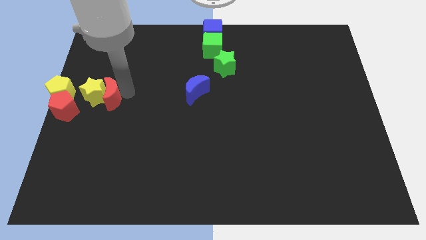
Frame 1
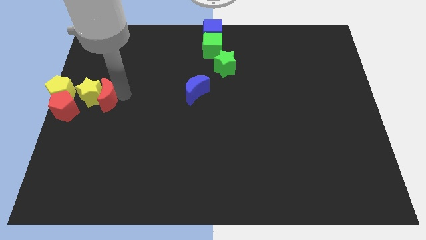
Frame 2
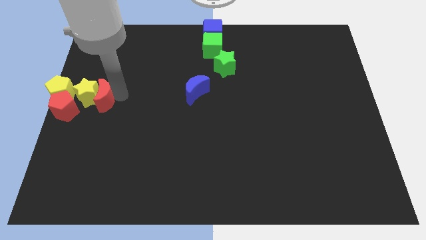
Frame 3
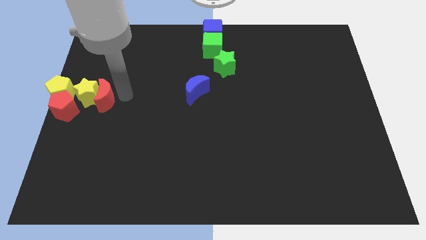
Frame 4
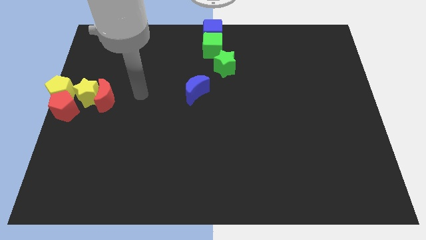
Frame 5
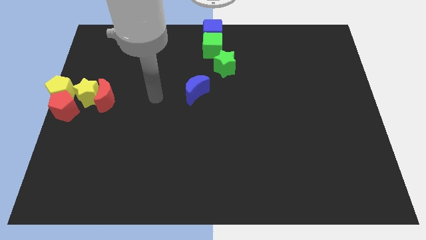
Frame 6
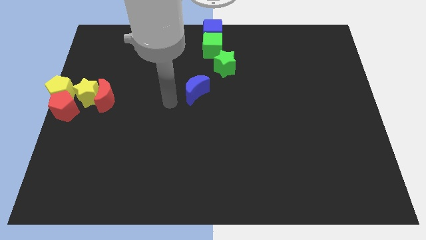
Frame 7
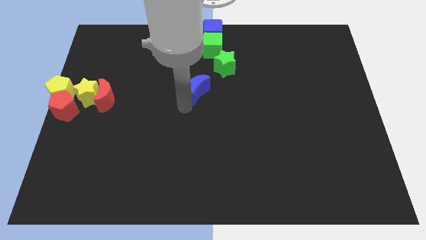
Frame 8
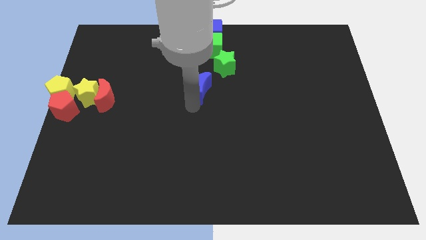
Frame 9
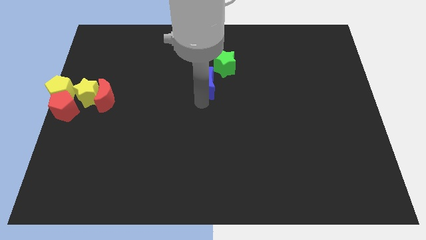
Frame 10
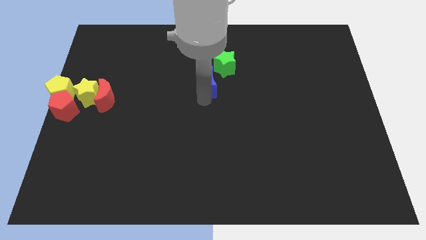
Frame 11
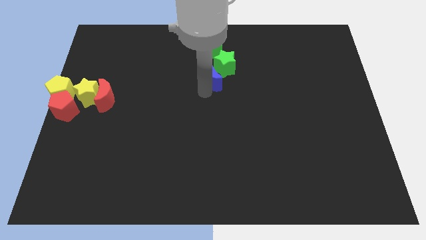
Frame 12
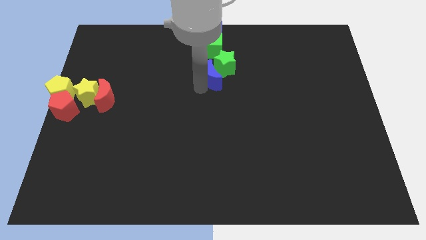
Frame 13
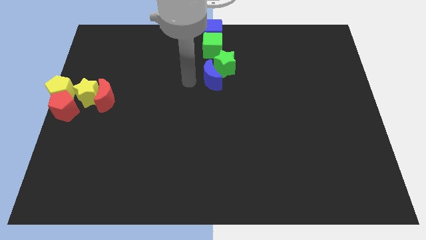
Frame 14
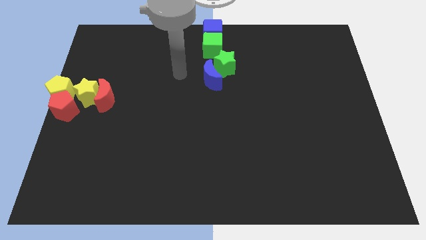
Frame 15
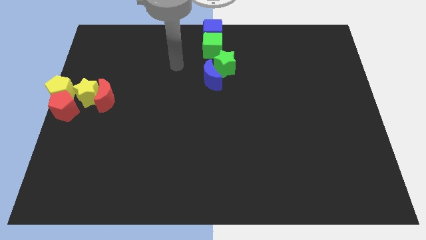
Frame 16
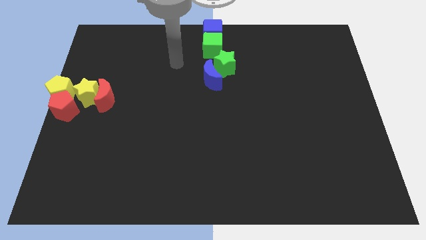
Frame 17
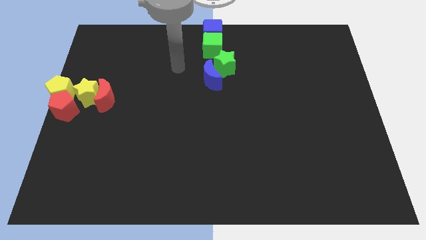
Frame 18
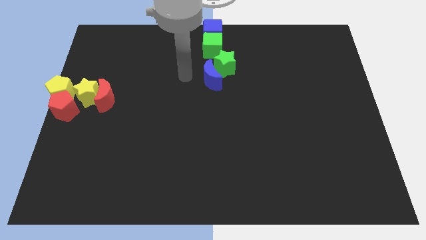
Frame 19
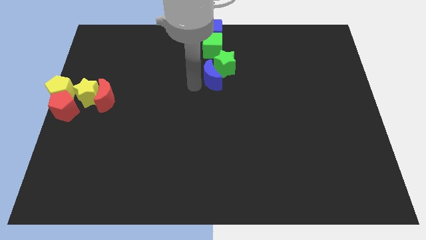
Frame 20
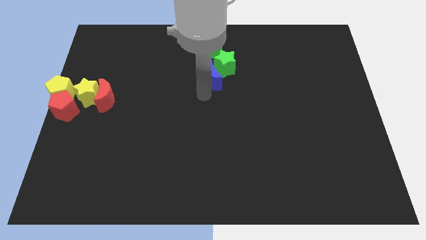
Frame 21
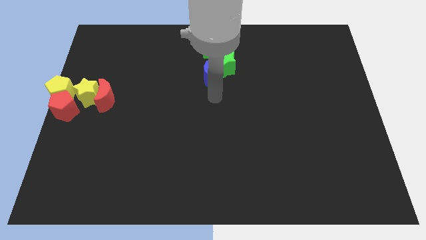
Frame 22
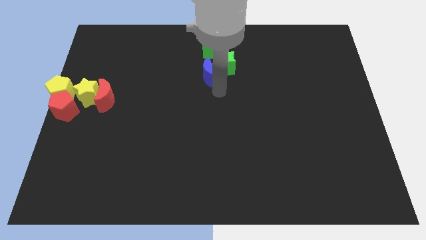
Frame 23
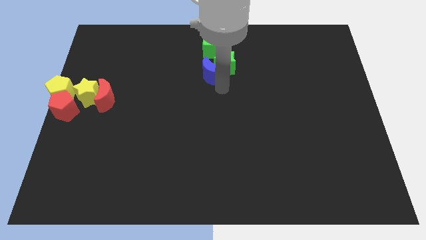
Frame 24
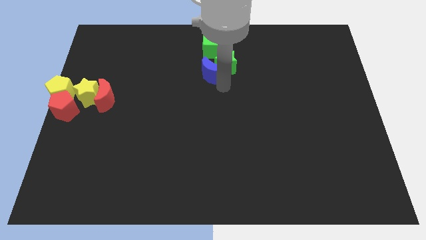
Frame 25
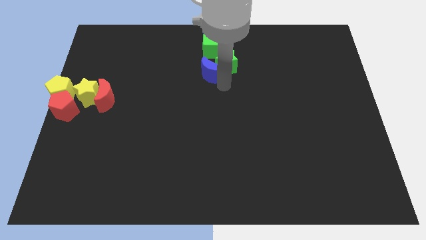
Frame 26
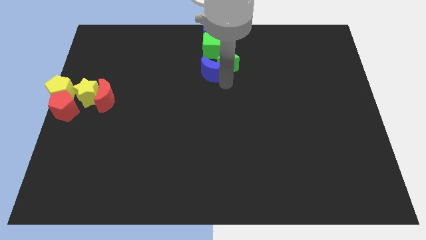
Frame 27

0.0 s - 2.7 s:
push blue half moon near green star

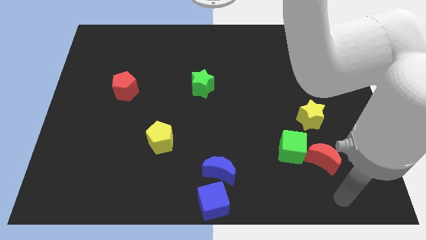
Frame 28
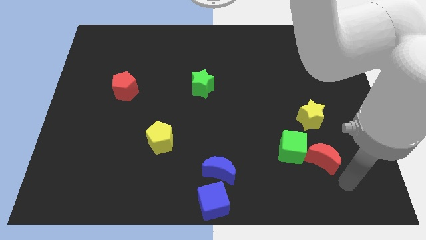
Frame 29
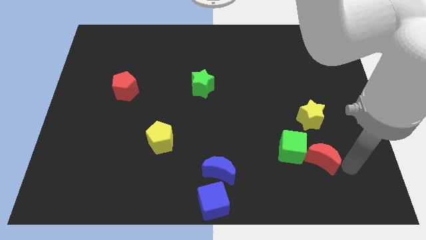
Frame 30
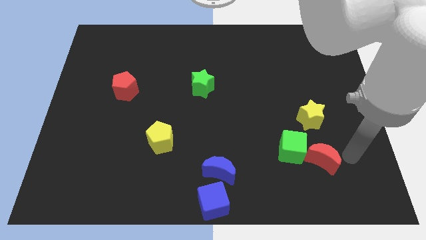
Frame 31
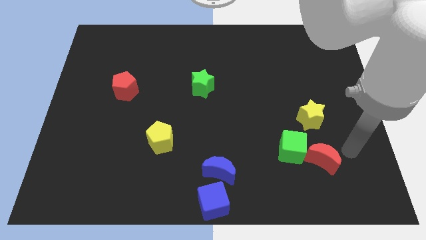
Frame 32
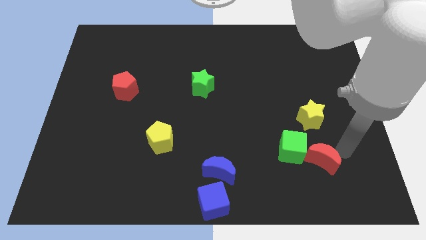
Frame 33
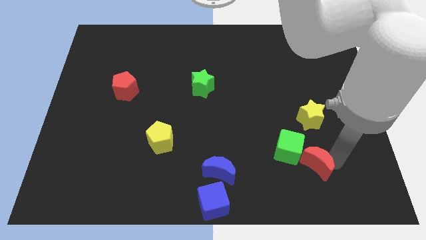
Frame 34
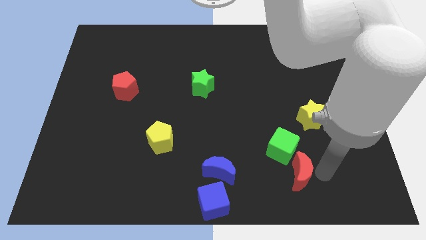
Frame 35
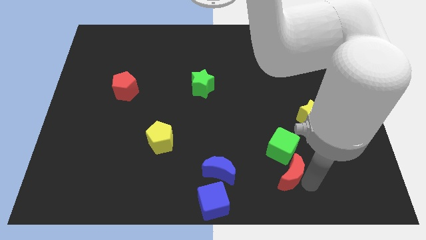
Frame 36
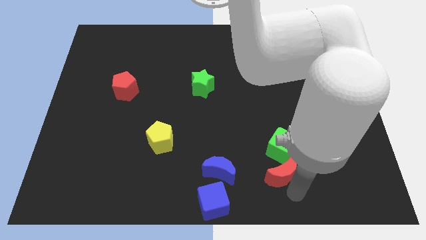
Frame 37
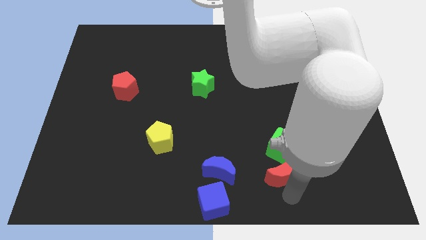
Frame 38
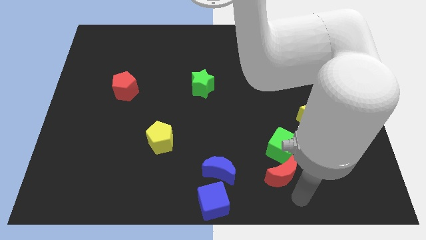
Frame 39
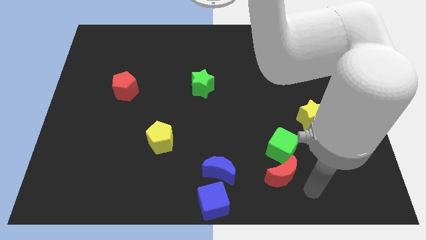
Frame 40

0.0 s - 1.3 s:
place the red crescent below green cube

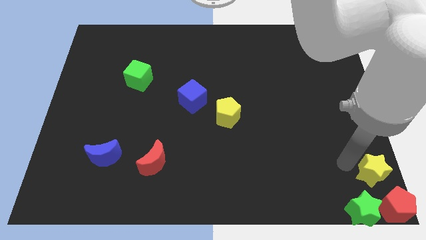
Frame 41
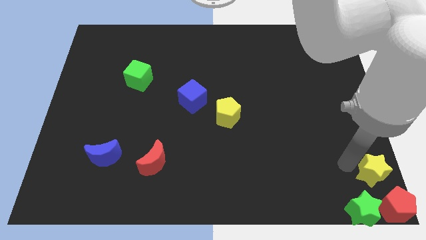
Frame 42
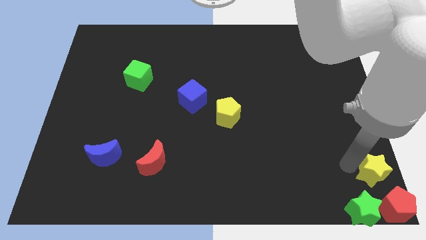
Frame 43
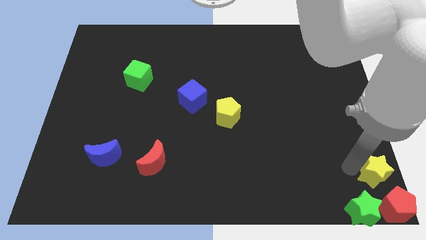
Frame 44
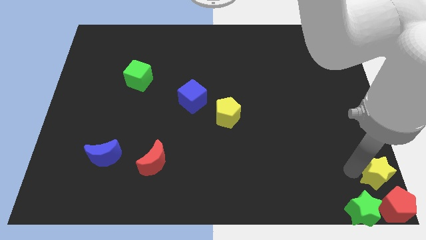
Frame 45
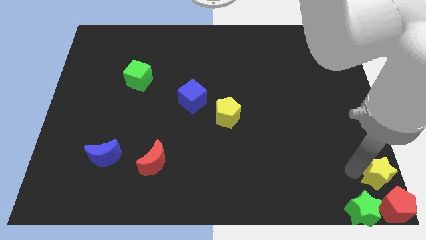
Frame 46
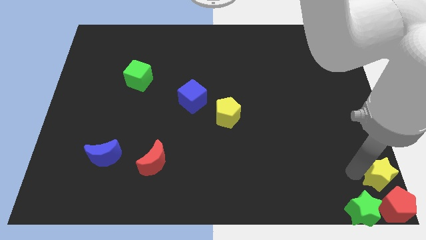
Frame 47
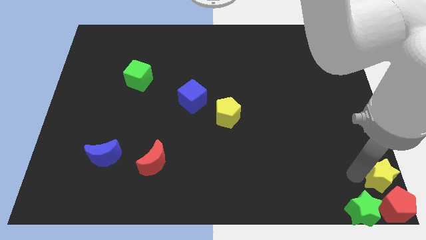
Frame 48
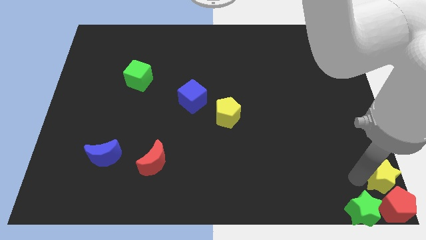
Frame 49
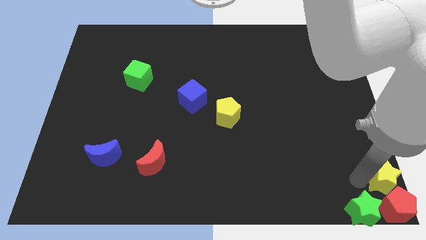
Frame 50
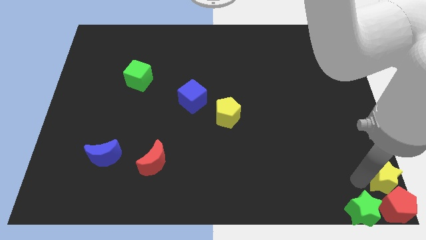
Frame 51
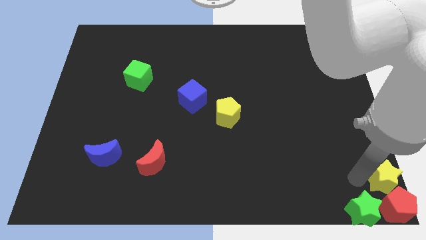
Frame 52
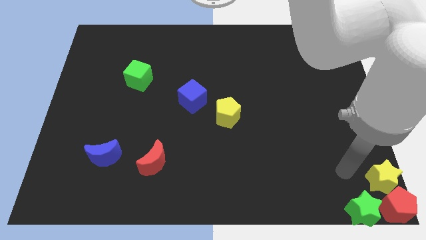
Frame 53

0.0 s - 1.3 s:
push the yellow star into the red pentagon

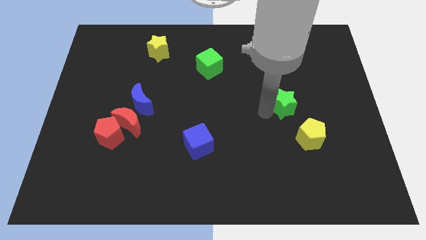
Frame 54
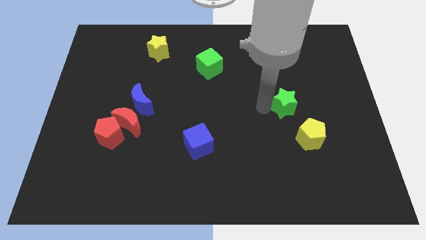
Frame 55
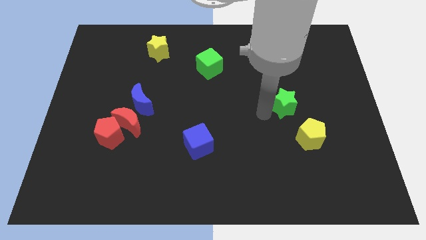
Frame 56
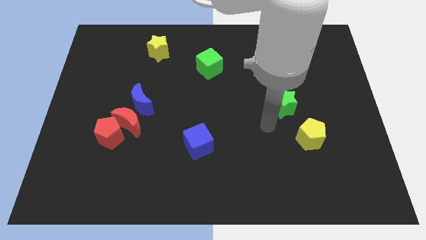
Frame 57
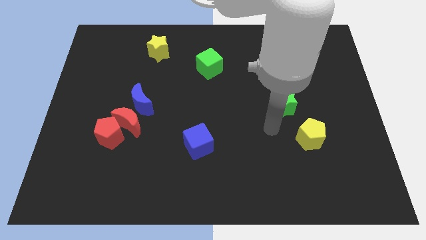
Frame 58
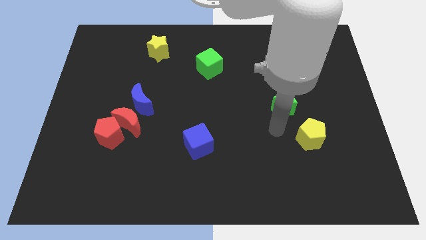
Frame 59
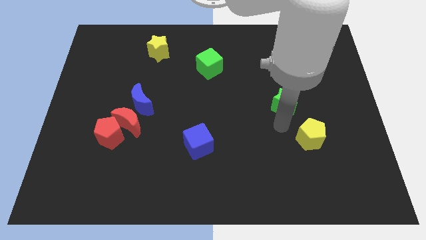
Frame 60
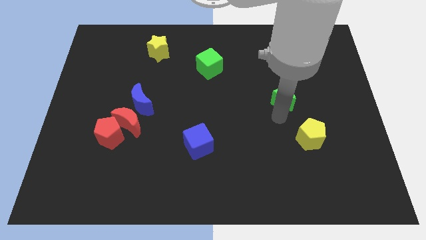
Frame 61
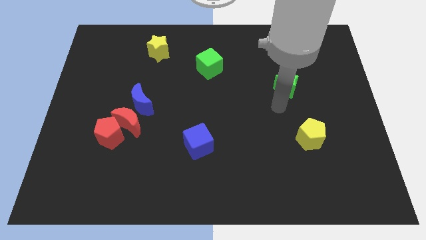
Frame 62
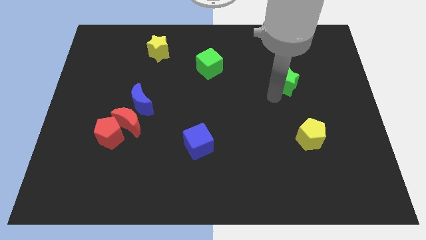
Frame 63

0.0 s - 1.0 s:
move green star away from yellow pentagon

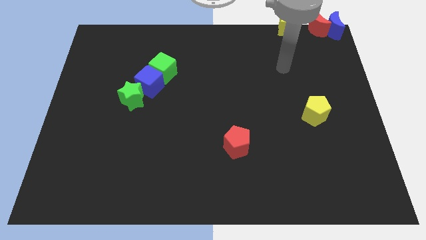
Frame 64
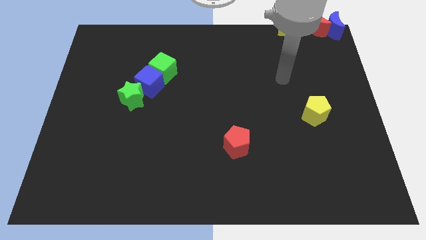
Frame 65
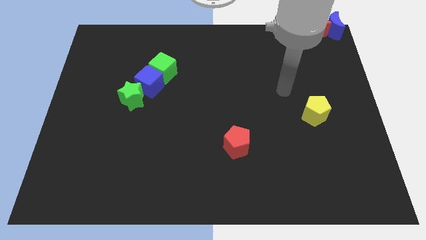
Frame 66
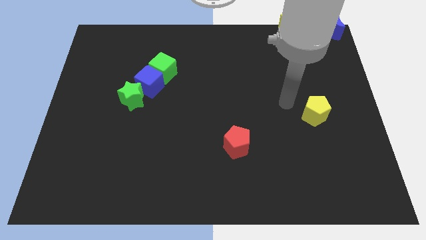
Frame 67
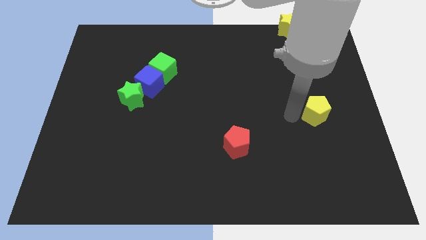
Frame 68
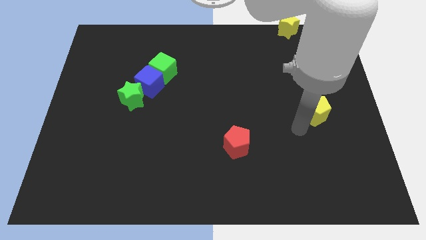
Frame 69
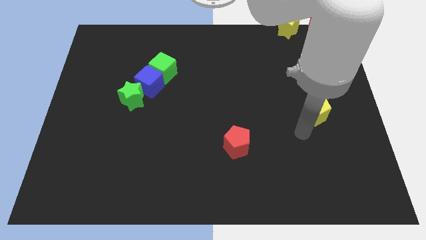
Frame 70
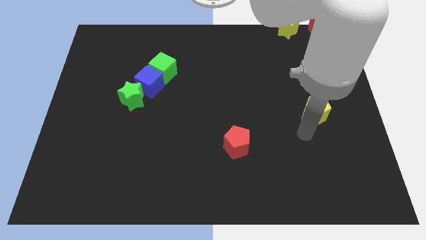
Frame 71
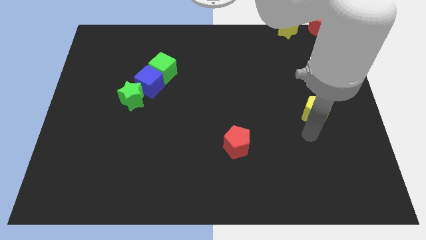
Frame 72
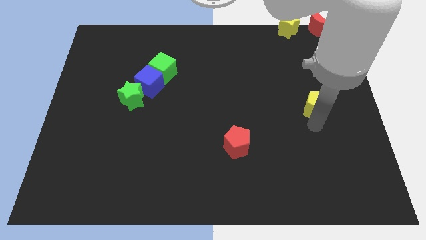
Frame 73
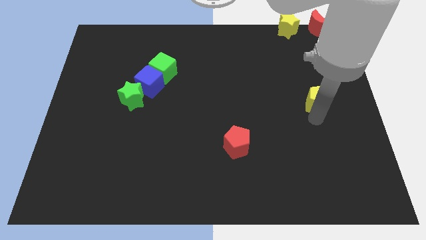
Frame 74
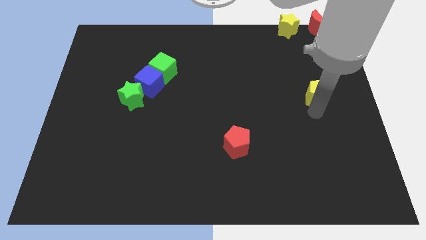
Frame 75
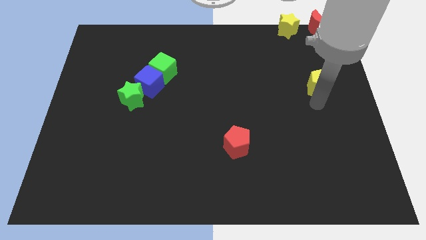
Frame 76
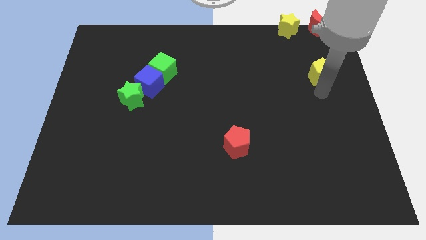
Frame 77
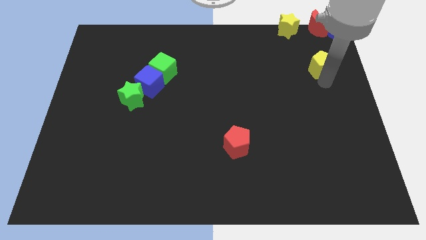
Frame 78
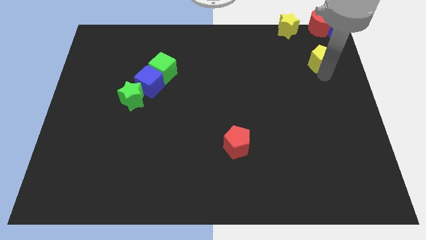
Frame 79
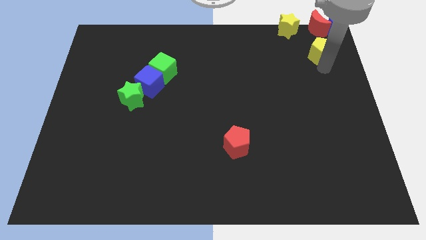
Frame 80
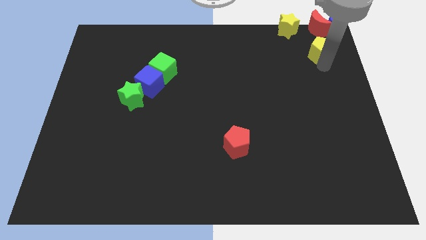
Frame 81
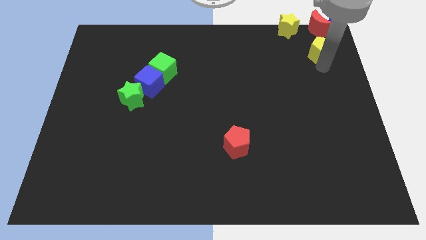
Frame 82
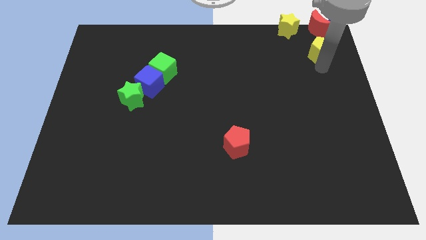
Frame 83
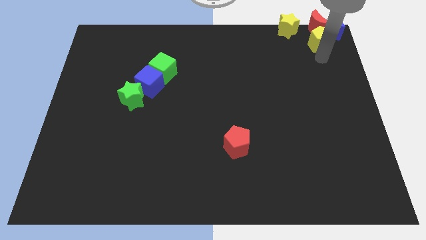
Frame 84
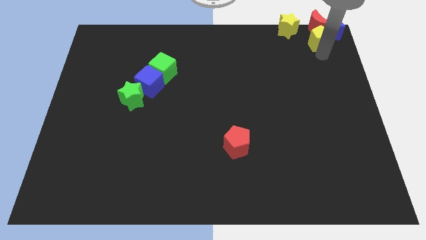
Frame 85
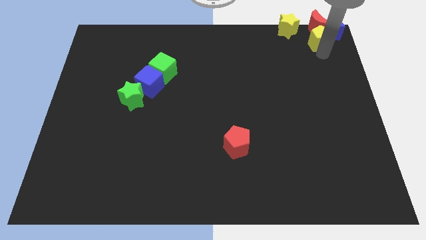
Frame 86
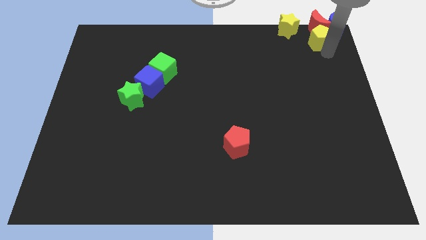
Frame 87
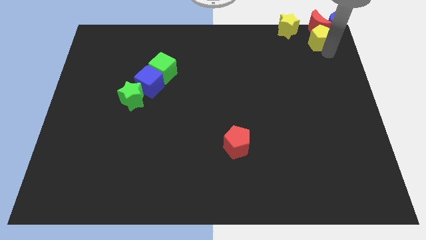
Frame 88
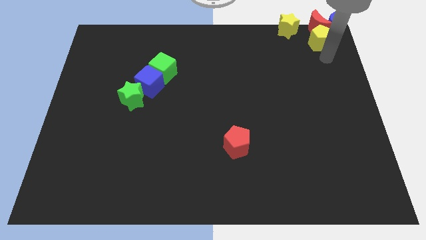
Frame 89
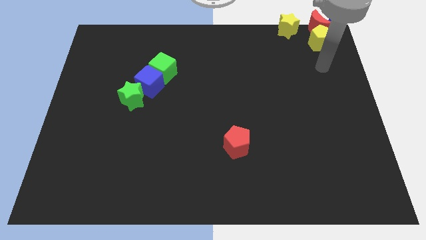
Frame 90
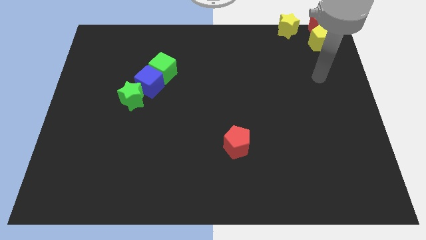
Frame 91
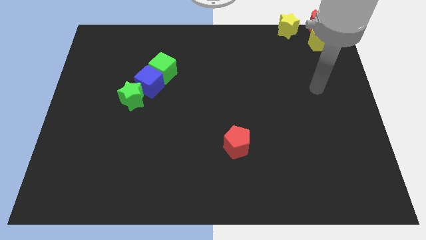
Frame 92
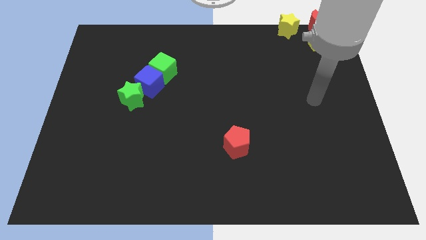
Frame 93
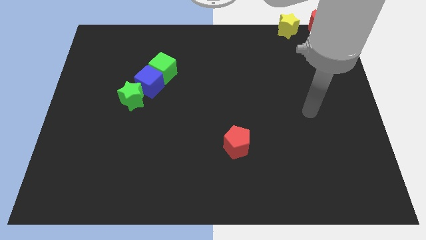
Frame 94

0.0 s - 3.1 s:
put the yellow pentagon at the bottom of the red crescent
